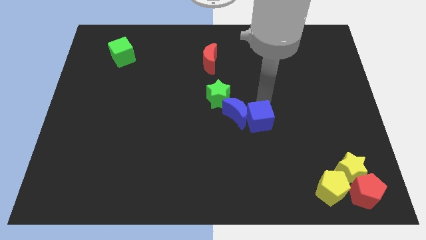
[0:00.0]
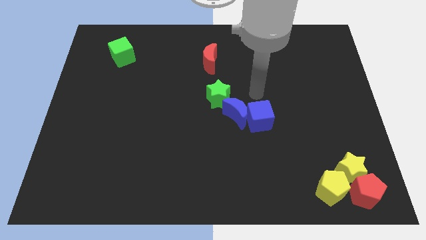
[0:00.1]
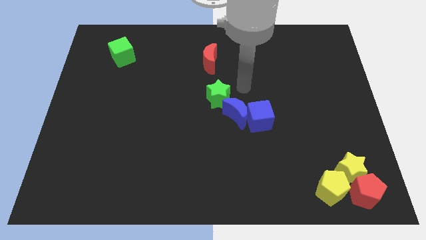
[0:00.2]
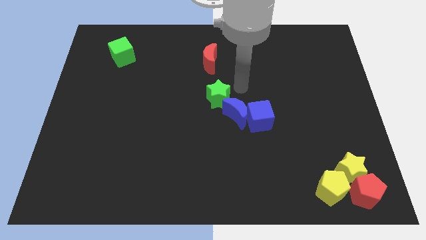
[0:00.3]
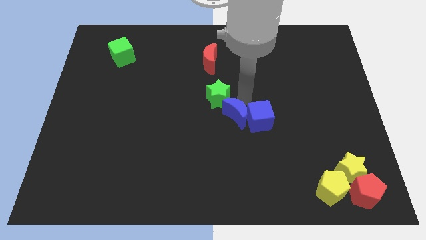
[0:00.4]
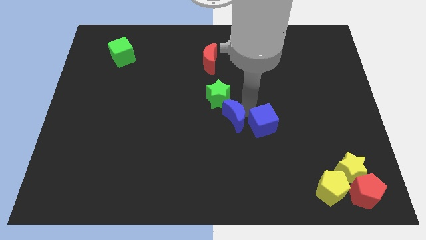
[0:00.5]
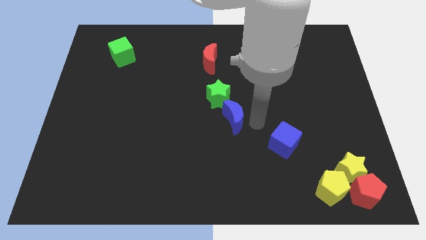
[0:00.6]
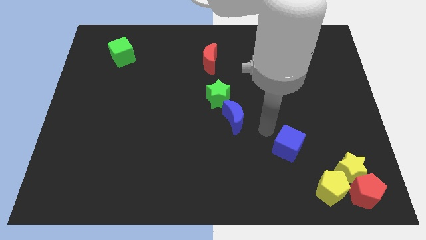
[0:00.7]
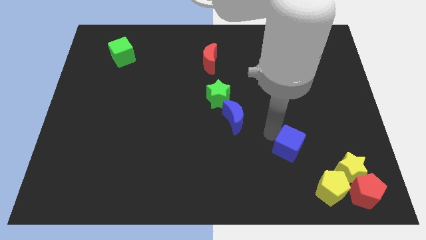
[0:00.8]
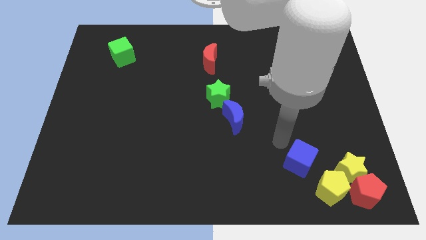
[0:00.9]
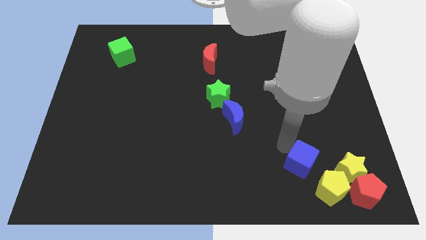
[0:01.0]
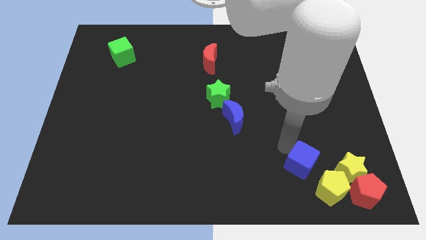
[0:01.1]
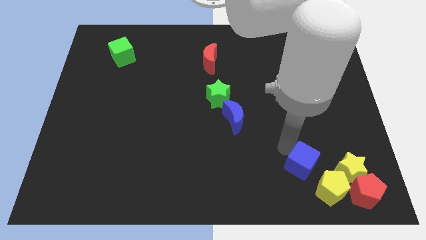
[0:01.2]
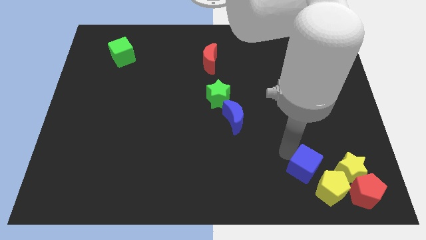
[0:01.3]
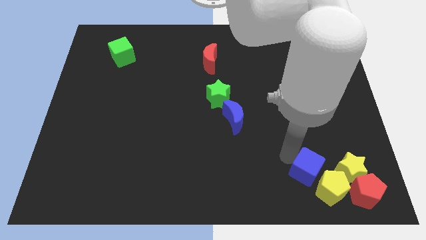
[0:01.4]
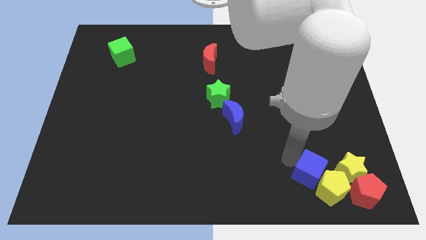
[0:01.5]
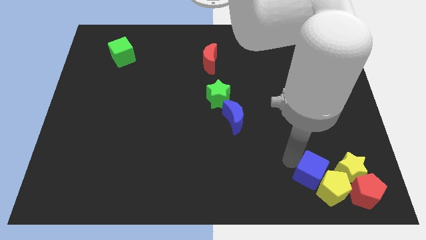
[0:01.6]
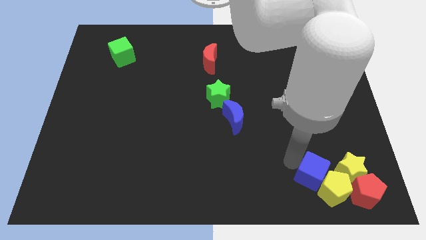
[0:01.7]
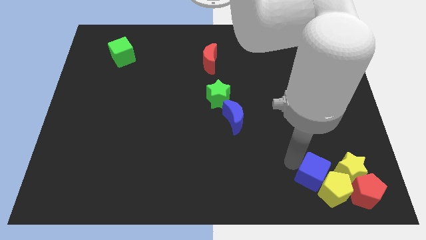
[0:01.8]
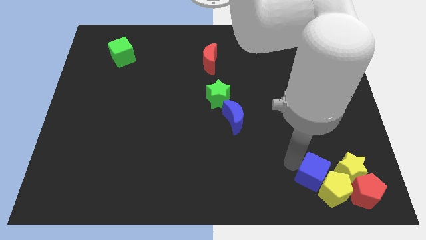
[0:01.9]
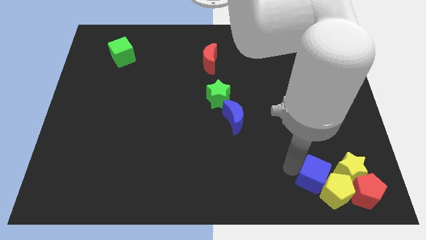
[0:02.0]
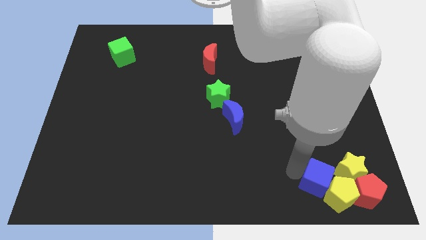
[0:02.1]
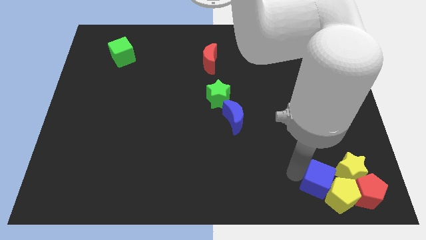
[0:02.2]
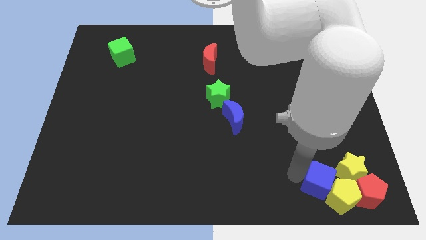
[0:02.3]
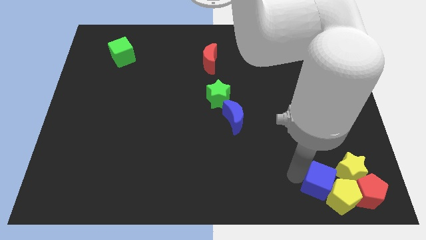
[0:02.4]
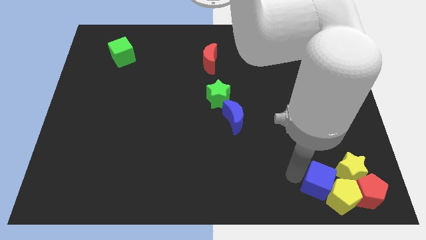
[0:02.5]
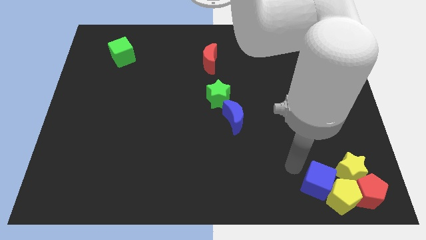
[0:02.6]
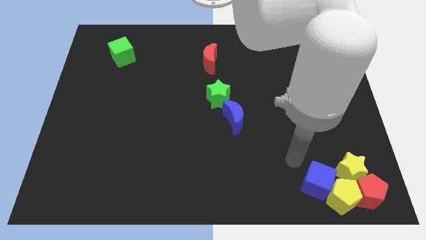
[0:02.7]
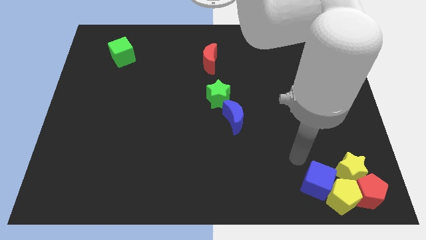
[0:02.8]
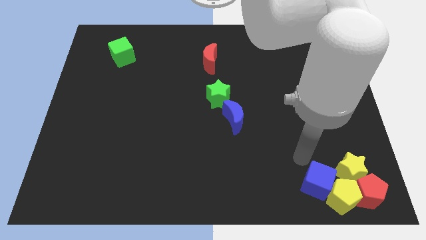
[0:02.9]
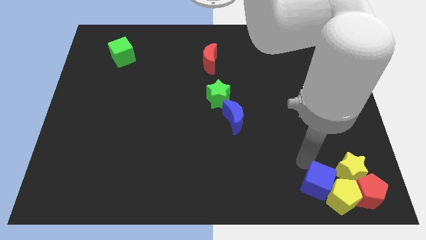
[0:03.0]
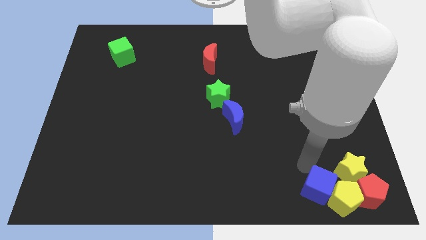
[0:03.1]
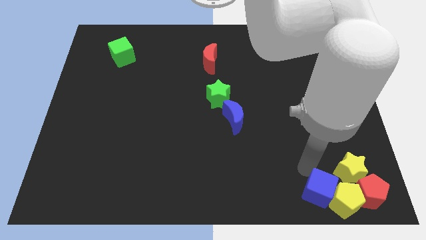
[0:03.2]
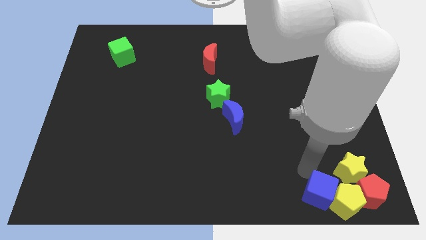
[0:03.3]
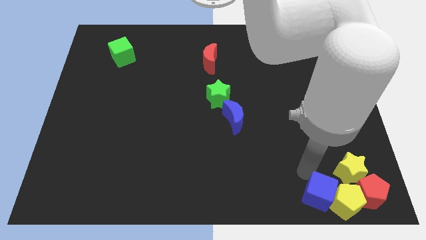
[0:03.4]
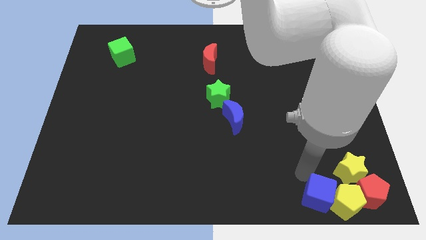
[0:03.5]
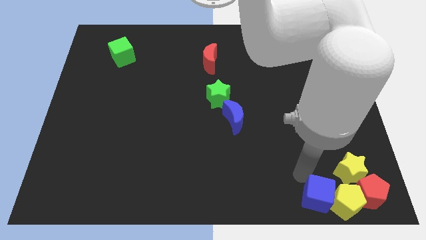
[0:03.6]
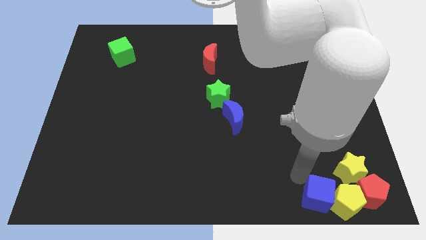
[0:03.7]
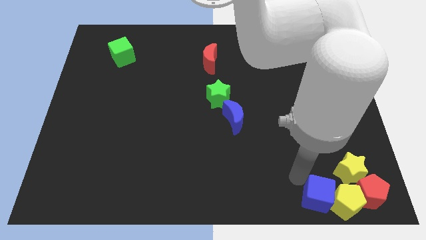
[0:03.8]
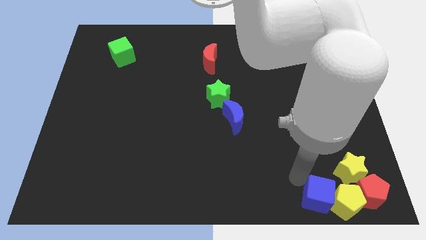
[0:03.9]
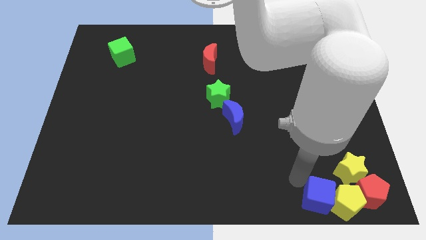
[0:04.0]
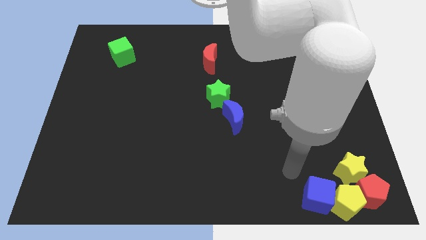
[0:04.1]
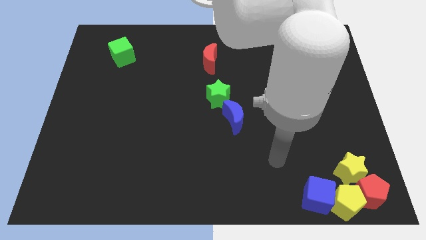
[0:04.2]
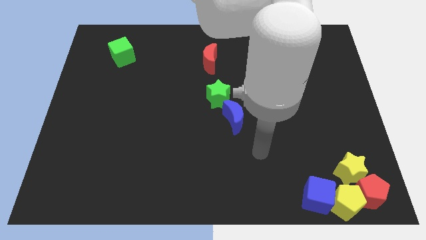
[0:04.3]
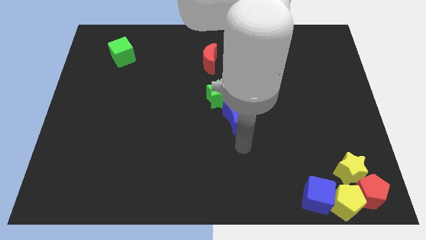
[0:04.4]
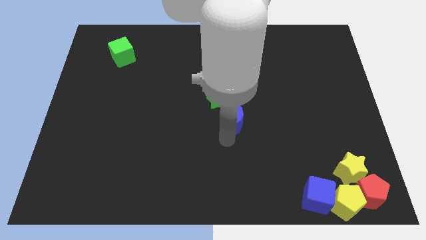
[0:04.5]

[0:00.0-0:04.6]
move the blue cube into the yellow pentagon

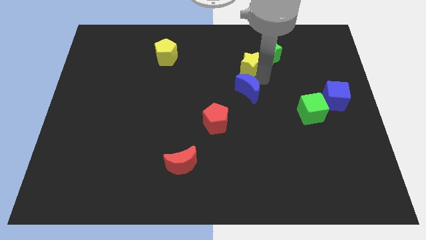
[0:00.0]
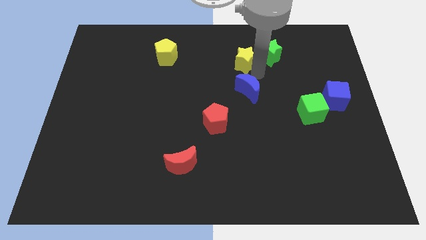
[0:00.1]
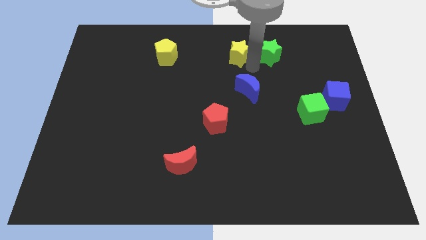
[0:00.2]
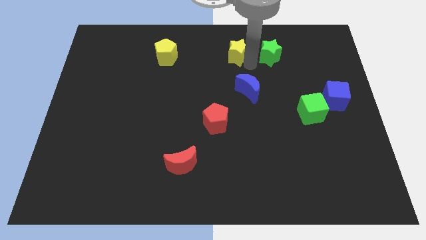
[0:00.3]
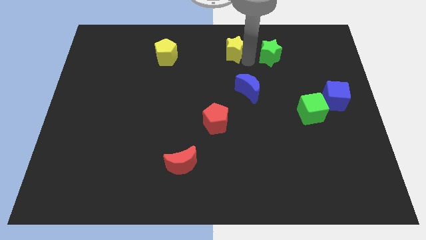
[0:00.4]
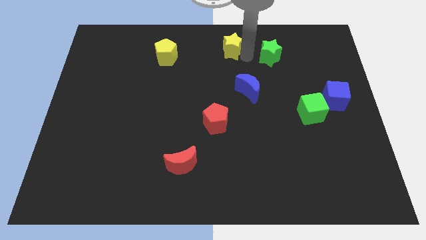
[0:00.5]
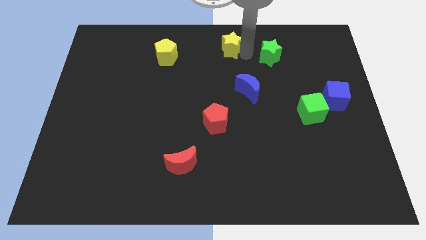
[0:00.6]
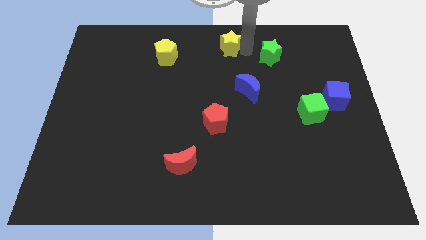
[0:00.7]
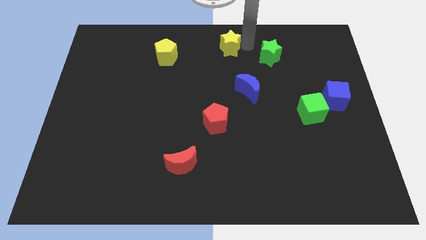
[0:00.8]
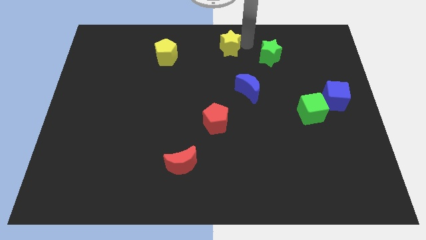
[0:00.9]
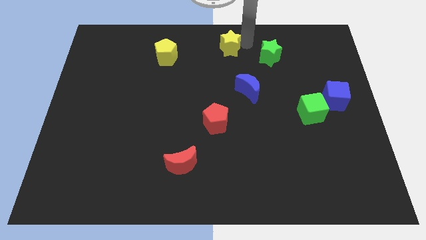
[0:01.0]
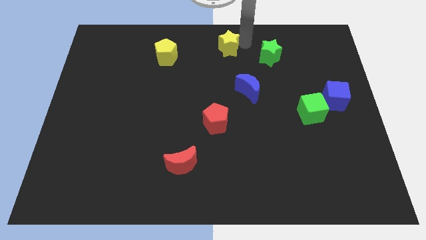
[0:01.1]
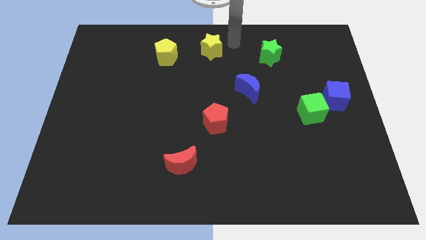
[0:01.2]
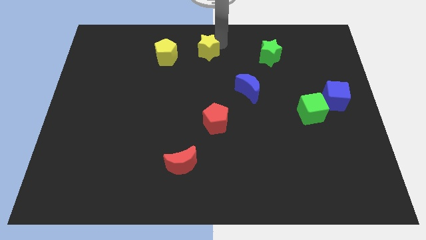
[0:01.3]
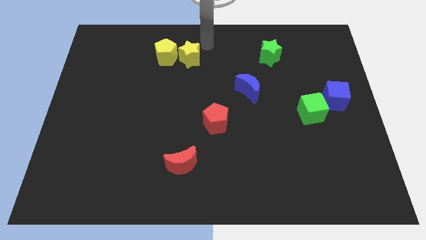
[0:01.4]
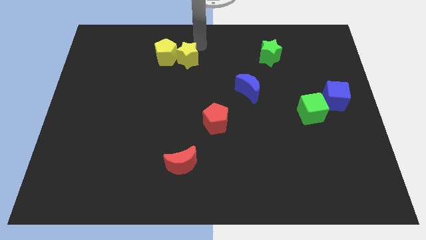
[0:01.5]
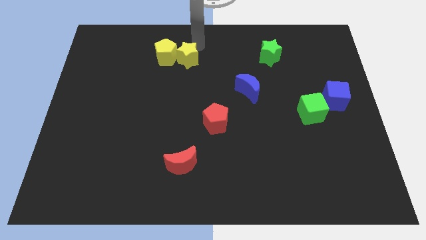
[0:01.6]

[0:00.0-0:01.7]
push the yellow star close to the yellow pentagon

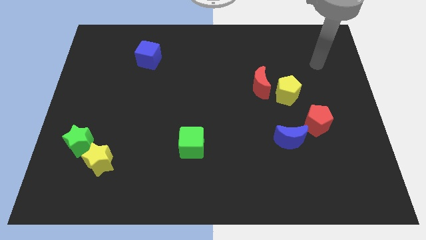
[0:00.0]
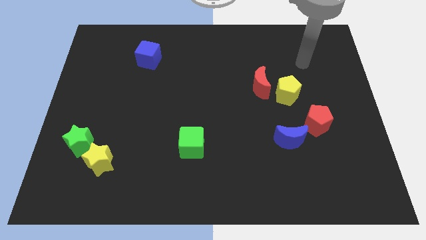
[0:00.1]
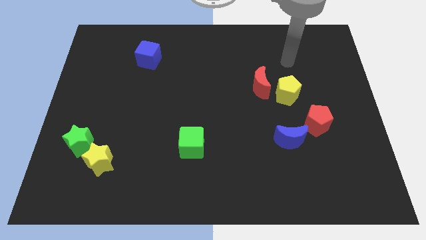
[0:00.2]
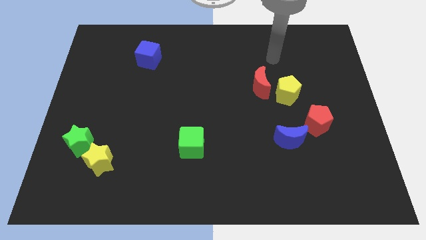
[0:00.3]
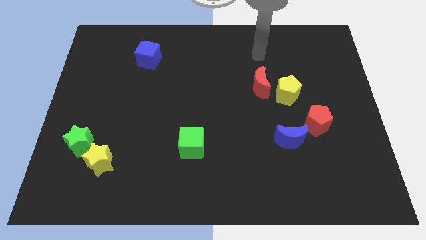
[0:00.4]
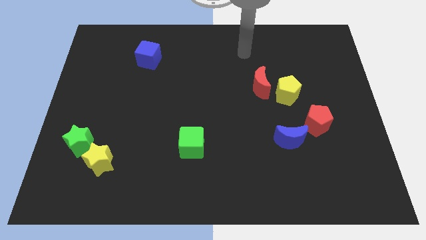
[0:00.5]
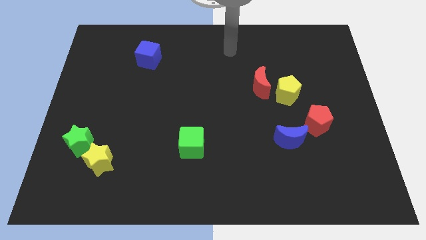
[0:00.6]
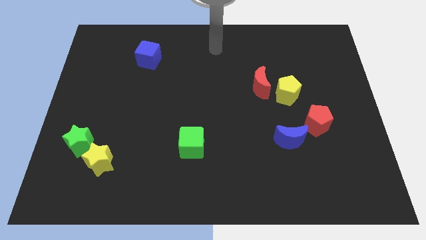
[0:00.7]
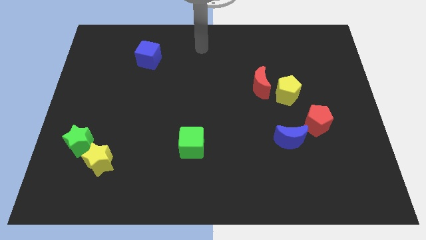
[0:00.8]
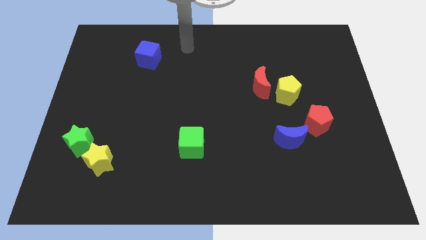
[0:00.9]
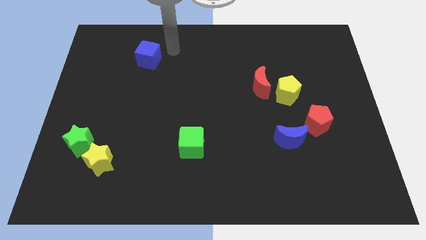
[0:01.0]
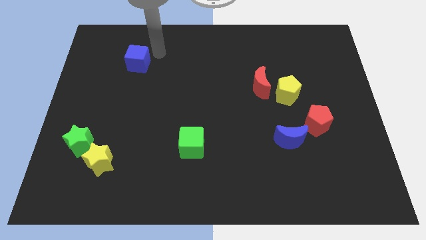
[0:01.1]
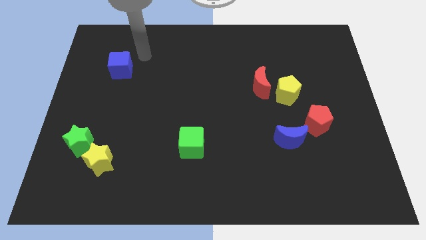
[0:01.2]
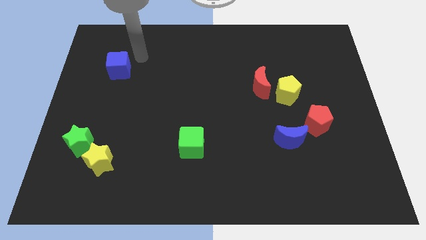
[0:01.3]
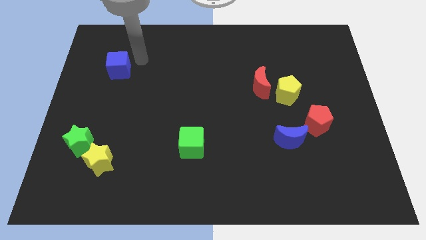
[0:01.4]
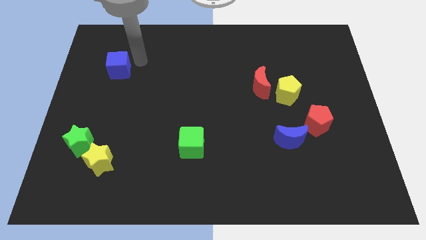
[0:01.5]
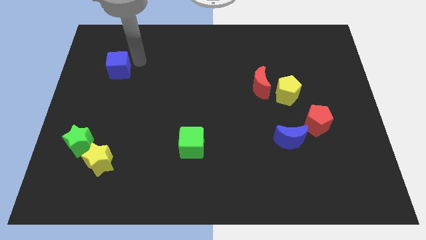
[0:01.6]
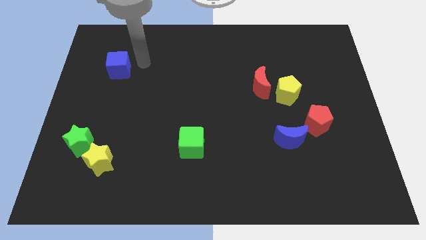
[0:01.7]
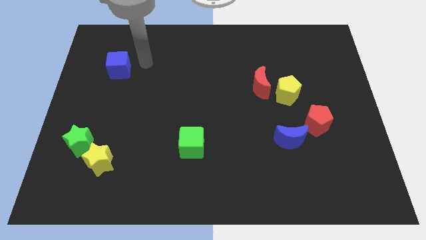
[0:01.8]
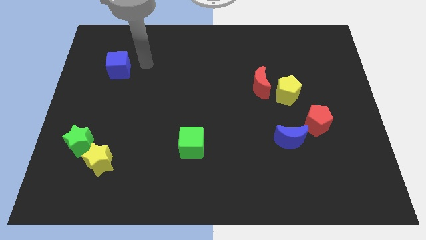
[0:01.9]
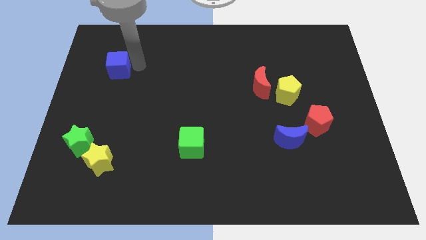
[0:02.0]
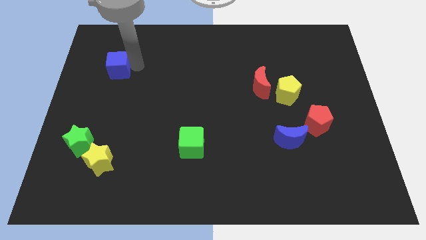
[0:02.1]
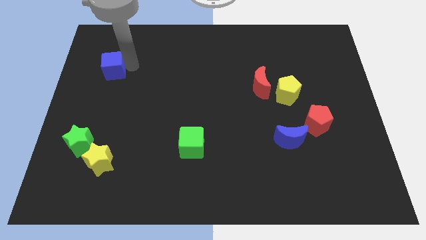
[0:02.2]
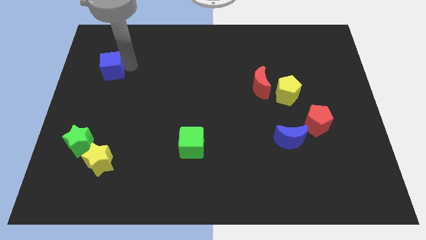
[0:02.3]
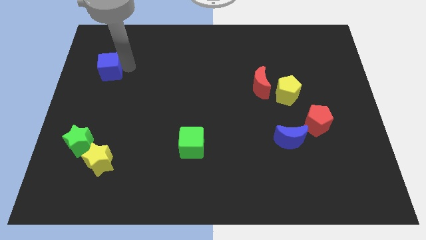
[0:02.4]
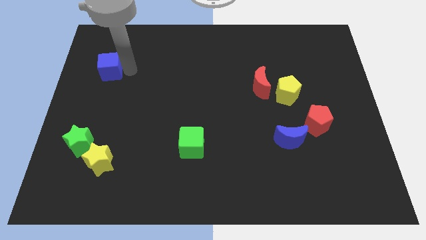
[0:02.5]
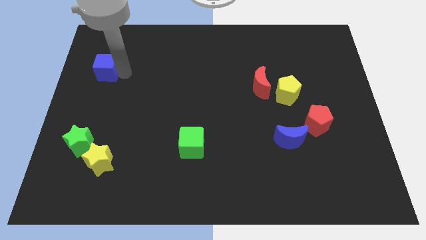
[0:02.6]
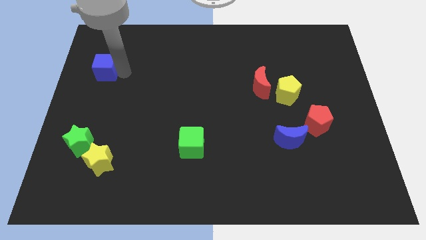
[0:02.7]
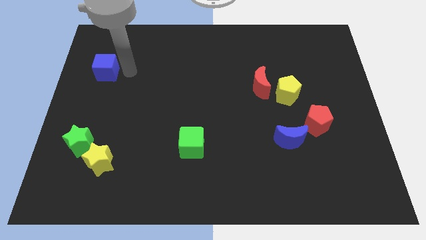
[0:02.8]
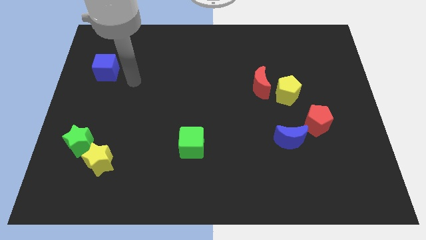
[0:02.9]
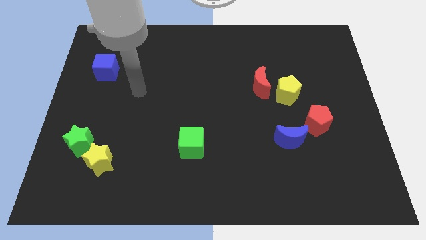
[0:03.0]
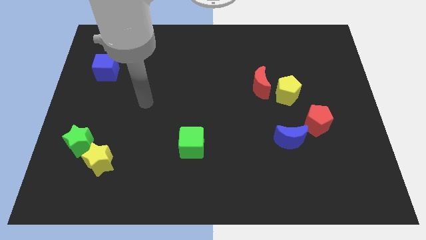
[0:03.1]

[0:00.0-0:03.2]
push the blue cube towards the left side of the board
